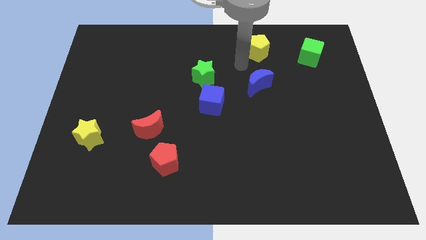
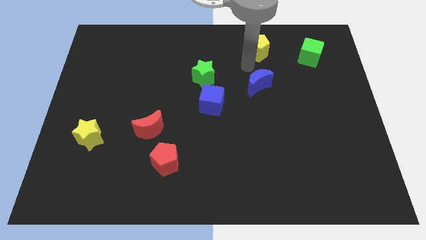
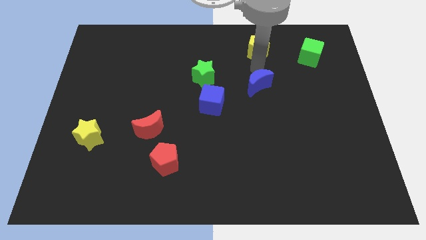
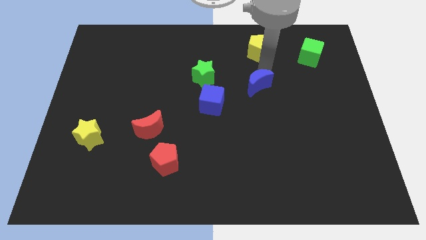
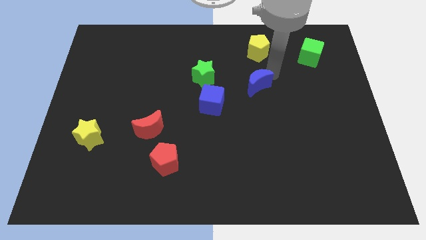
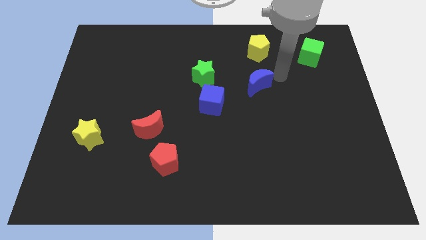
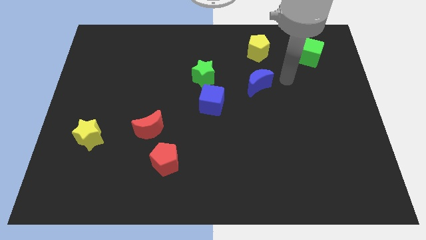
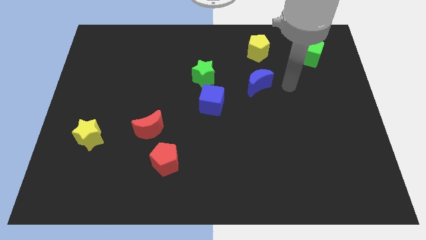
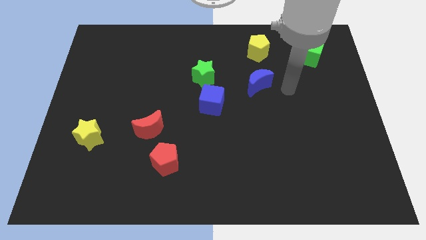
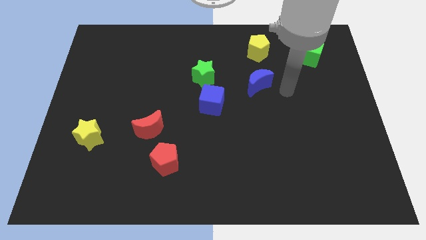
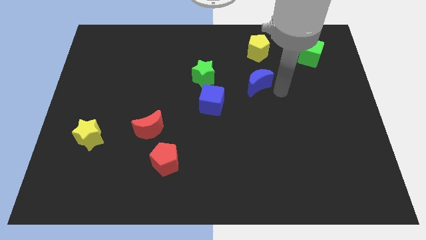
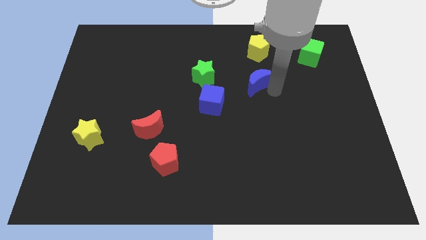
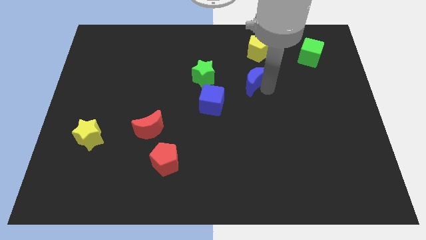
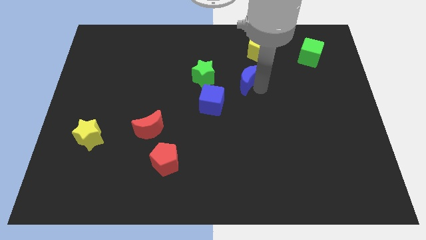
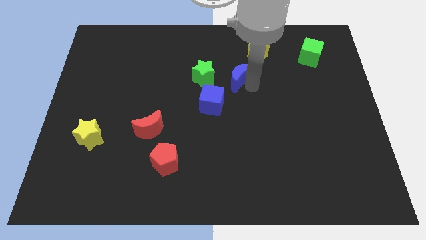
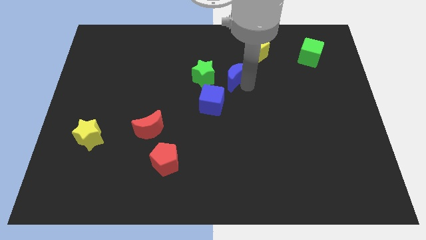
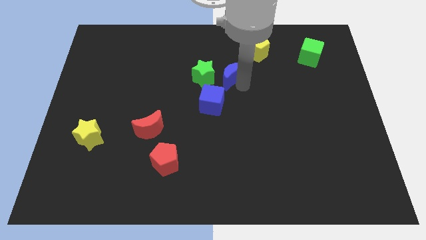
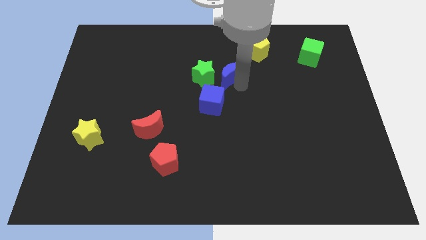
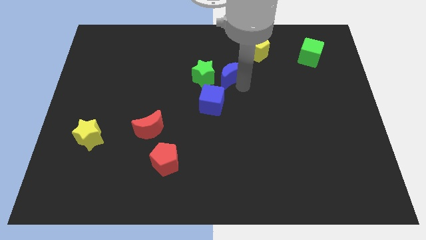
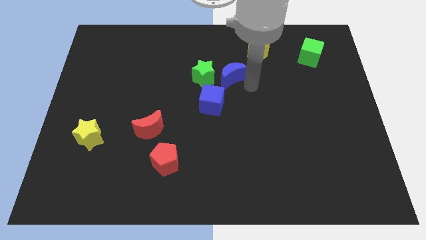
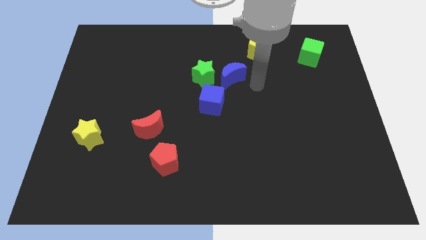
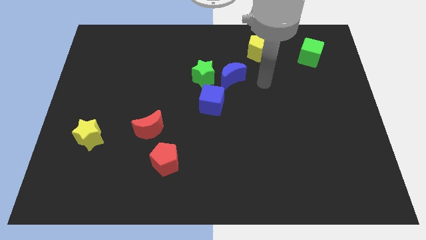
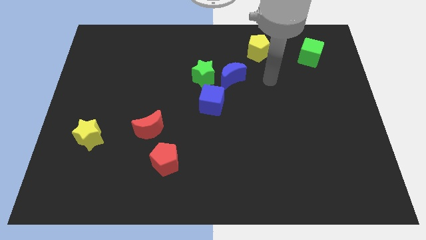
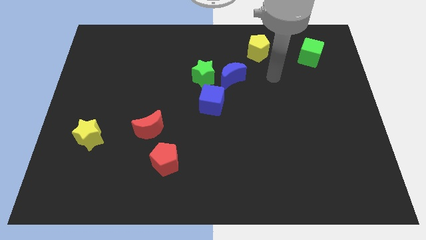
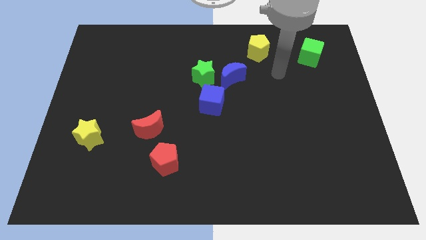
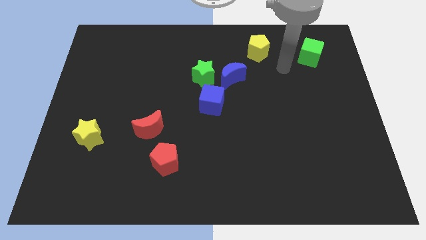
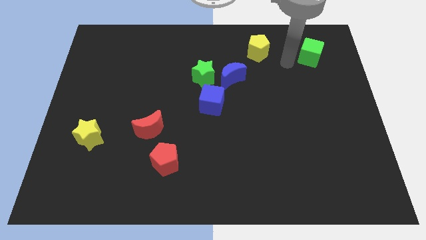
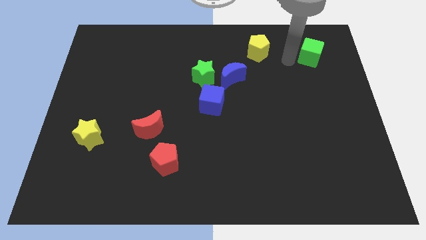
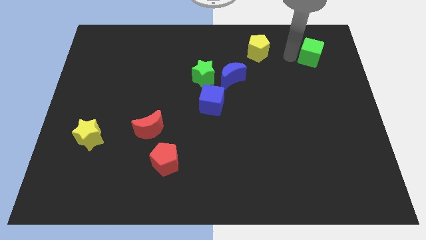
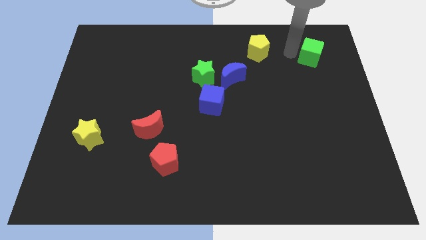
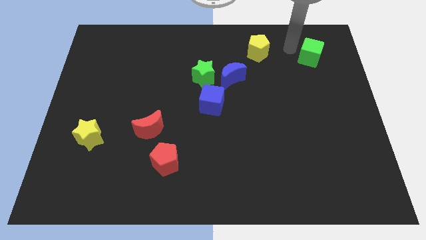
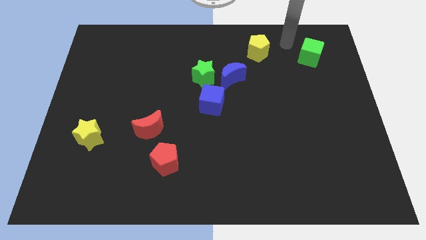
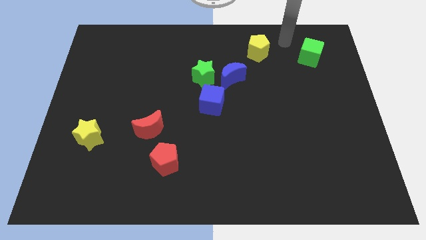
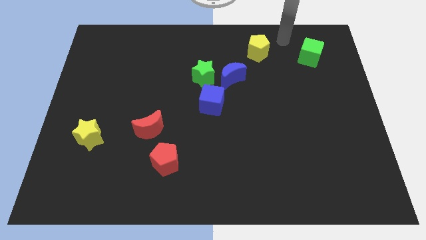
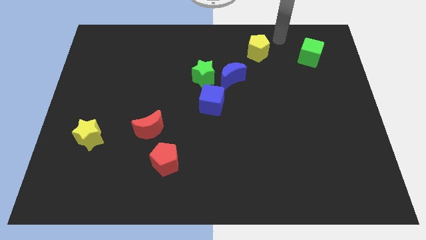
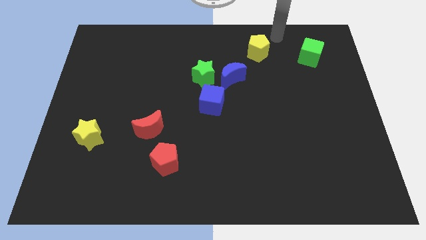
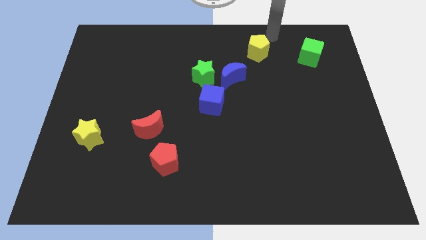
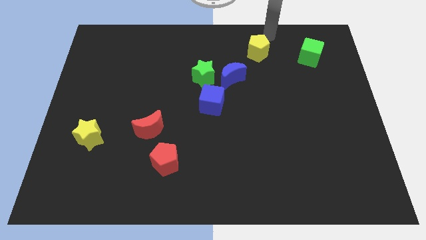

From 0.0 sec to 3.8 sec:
move the blue crescent towards the green star

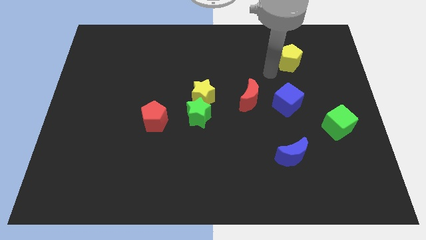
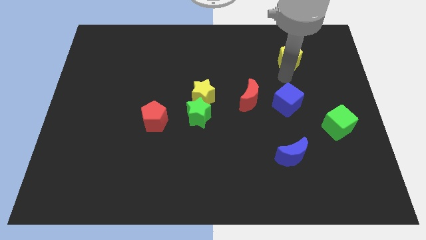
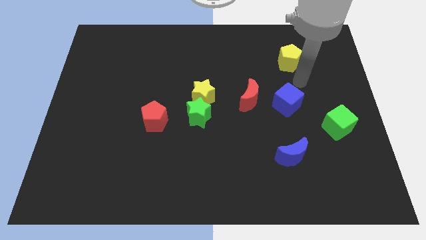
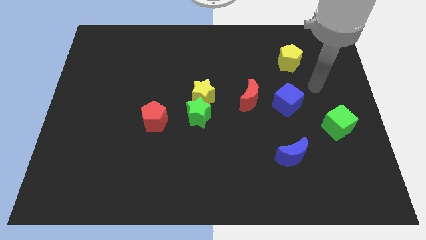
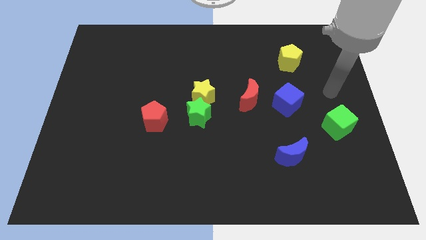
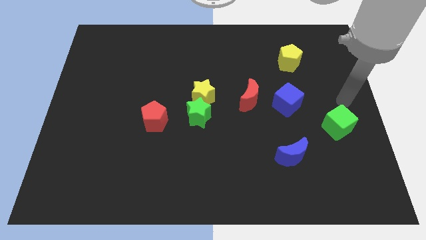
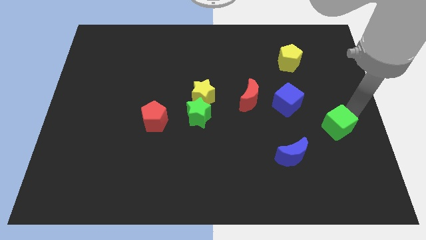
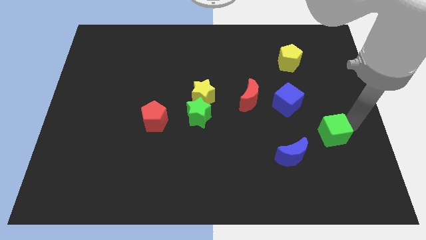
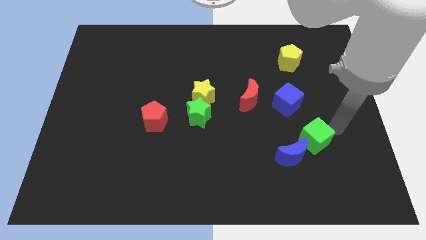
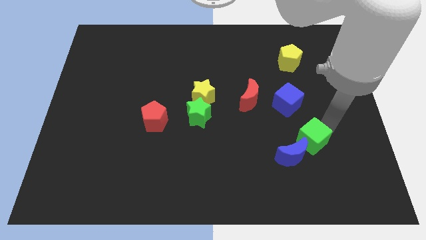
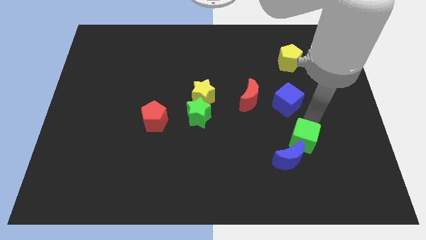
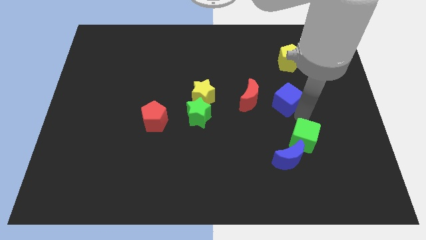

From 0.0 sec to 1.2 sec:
push green cube in to blue moon

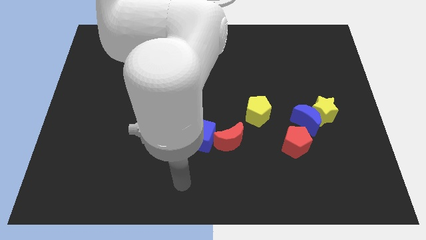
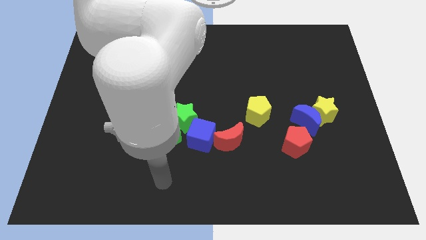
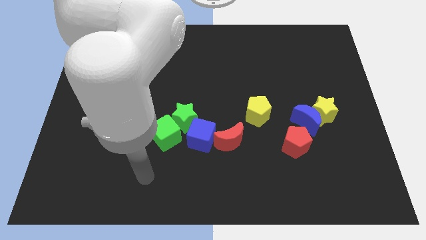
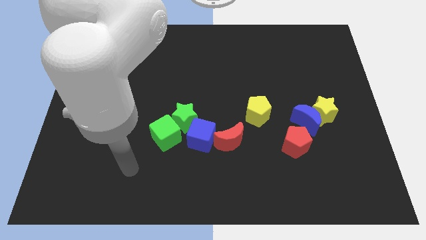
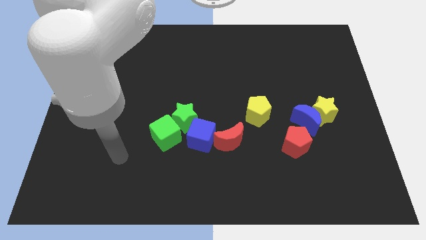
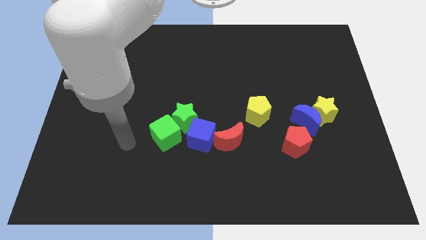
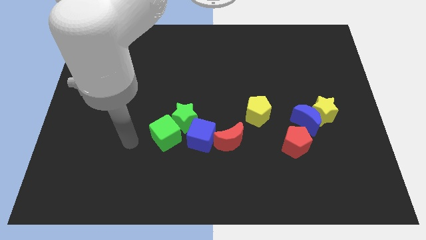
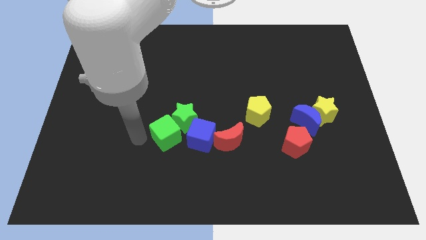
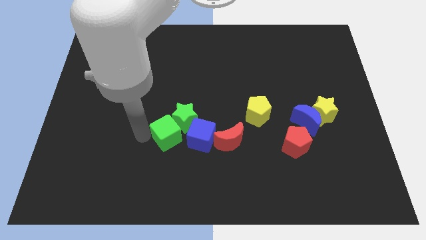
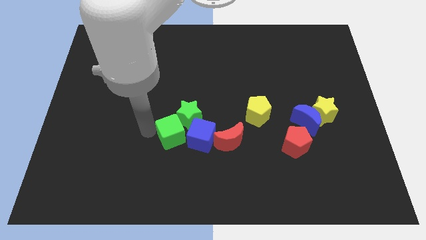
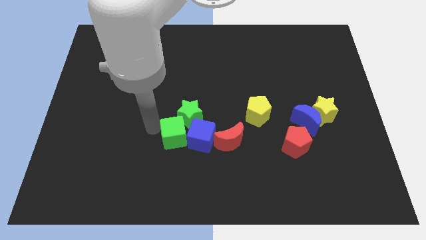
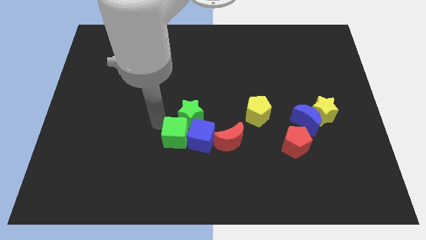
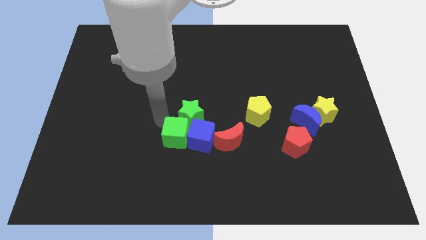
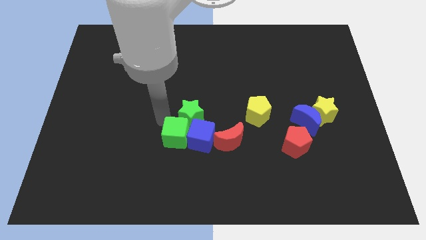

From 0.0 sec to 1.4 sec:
push the green cube into the blue cube

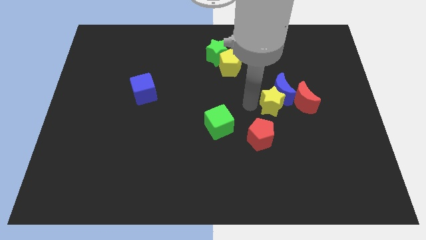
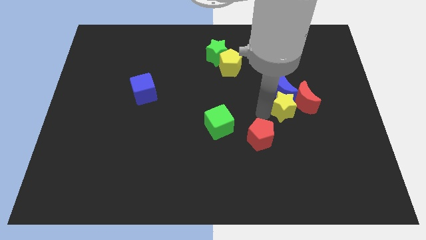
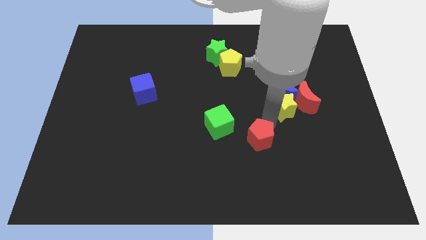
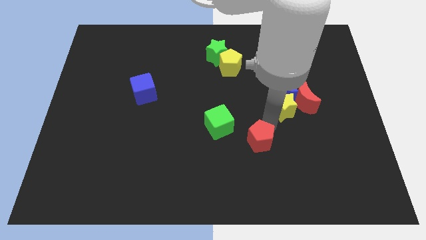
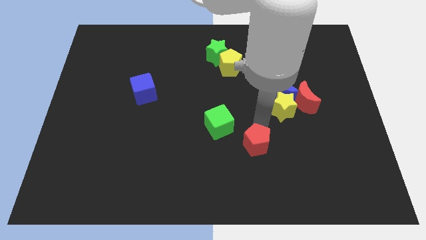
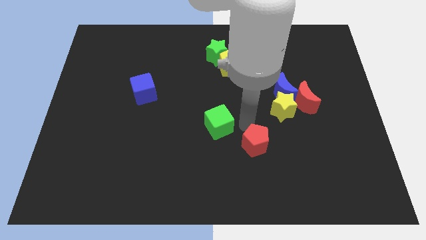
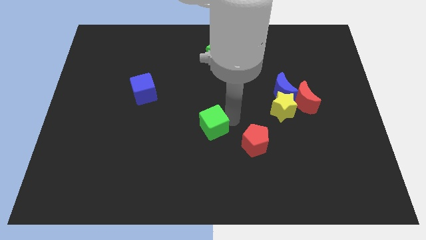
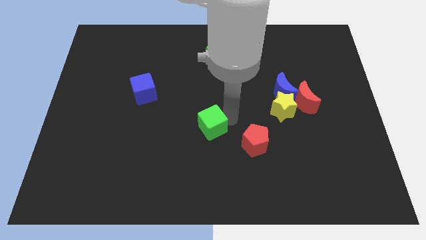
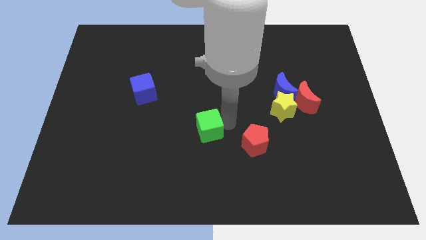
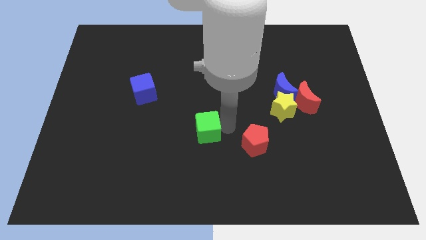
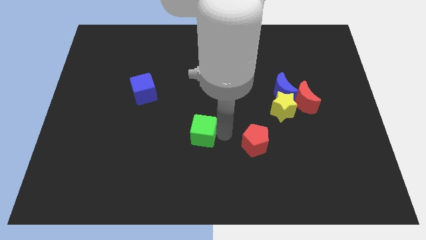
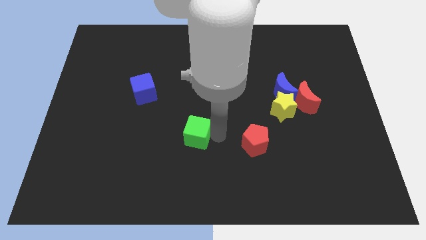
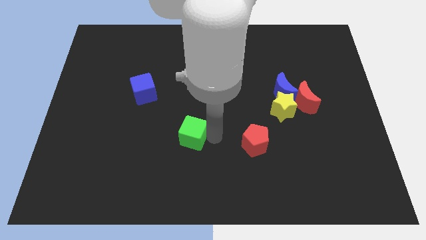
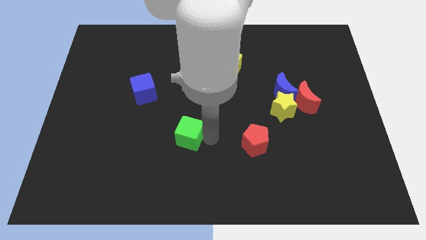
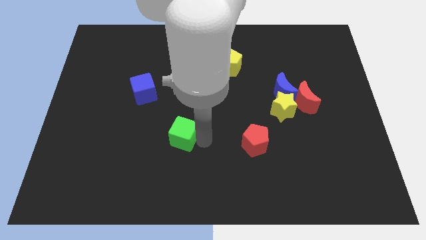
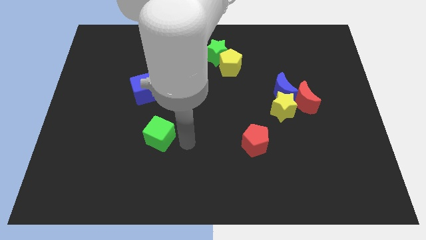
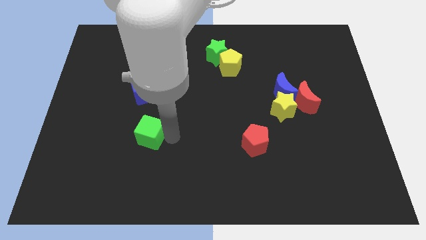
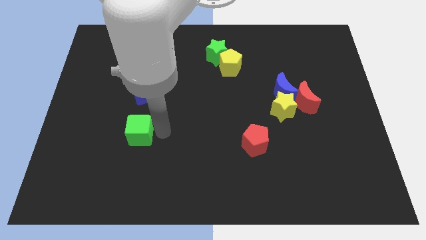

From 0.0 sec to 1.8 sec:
place the green cube below the blue cube

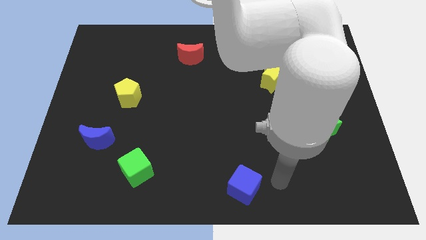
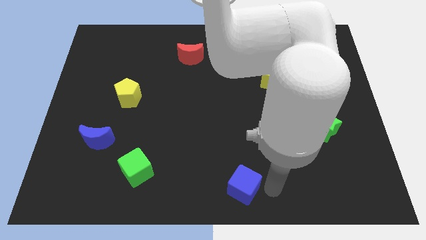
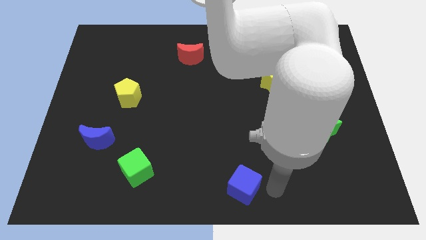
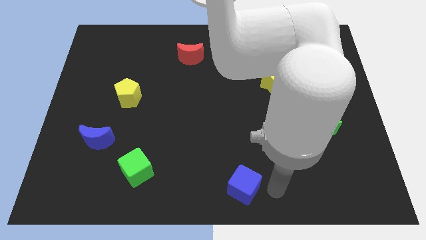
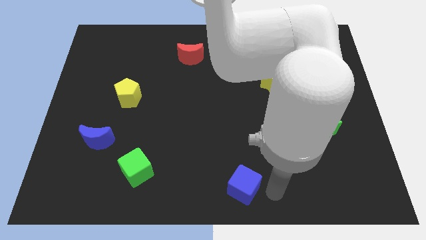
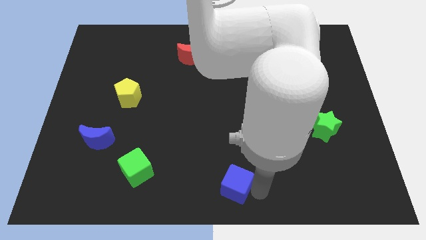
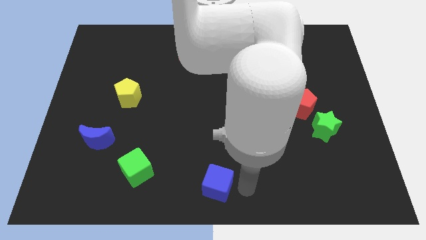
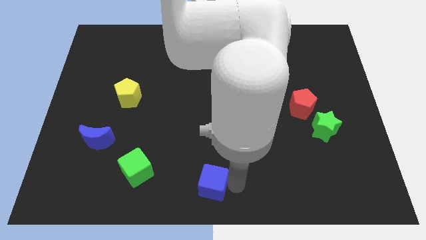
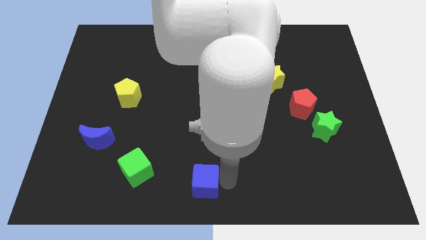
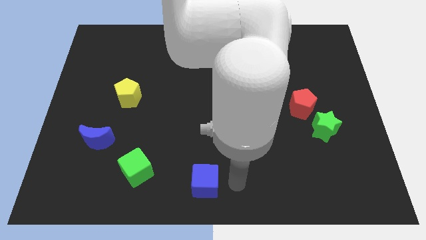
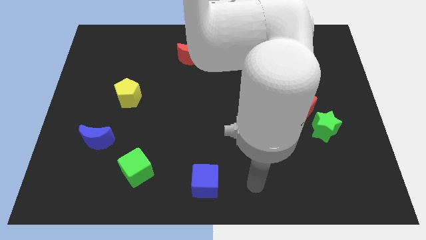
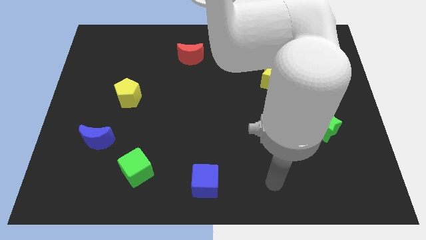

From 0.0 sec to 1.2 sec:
push the blue cube towards left
